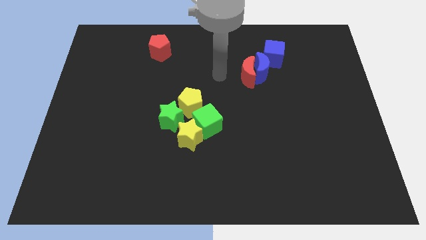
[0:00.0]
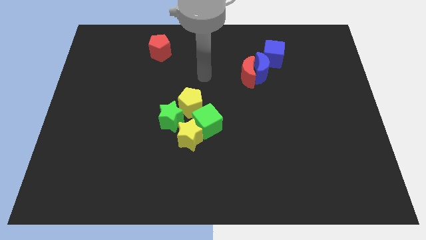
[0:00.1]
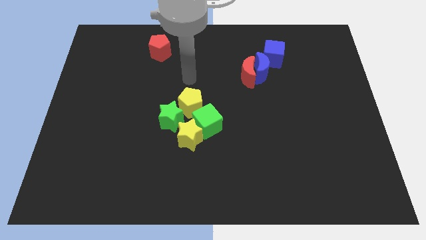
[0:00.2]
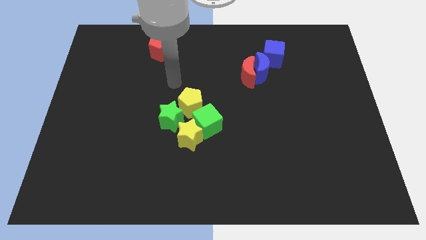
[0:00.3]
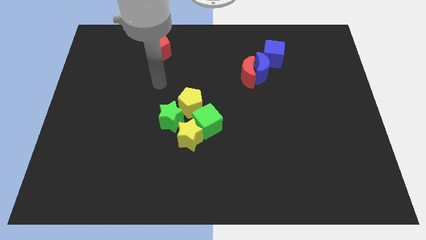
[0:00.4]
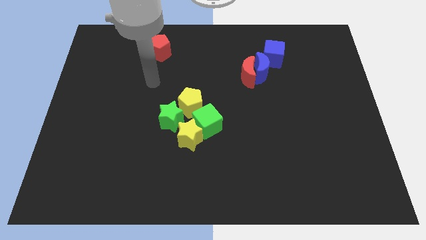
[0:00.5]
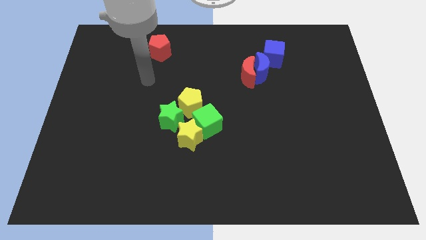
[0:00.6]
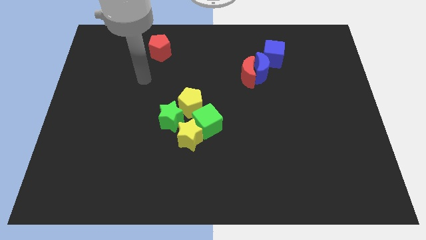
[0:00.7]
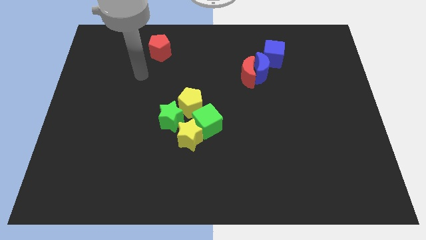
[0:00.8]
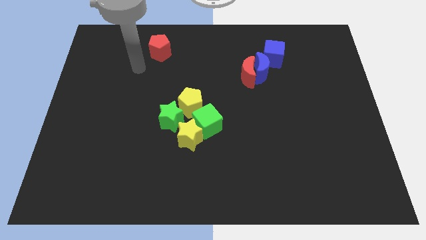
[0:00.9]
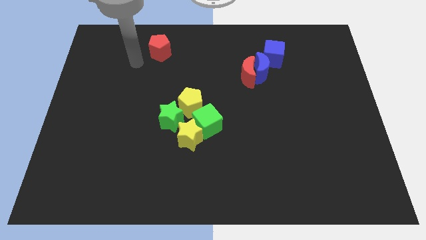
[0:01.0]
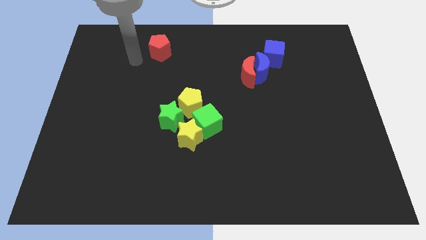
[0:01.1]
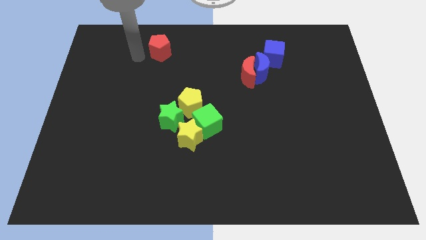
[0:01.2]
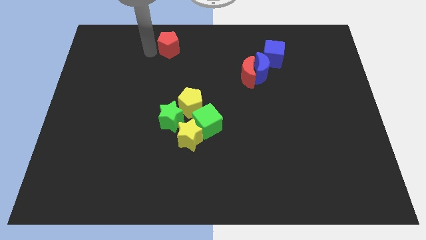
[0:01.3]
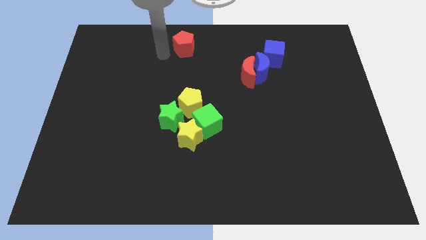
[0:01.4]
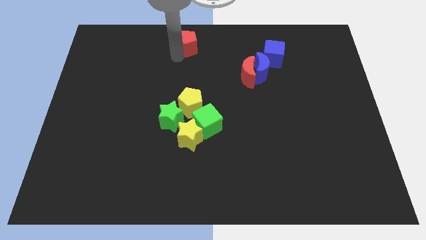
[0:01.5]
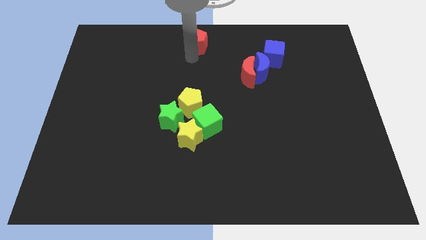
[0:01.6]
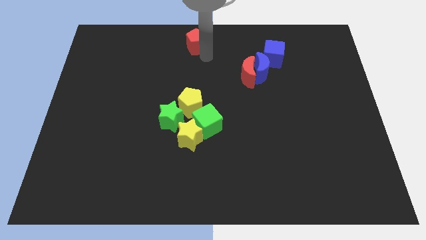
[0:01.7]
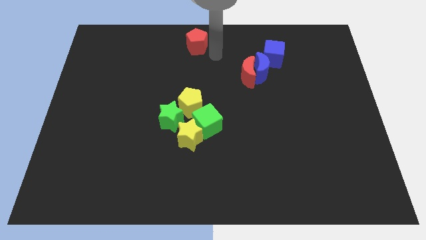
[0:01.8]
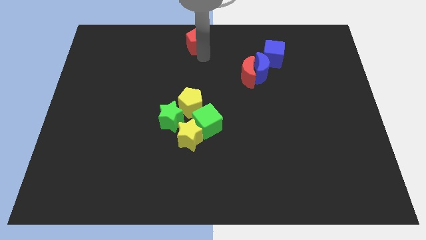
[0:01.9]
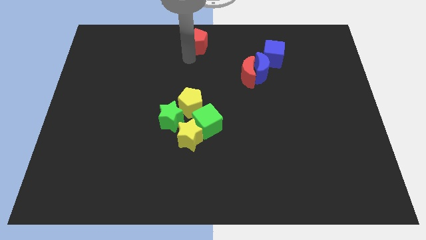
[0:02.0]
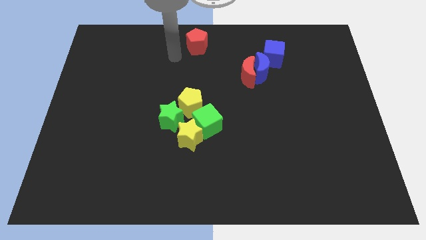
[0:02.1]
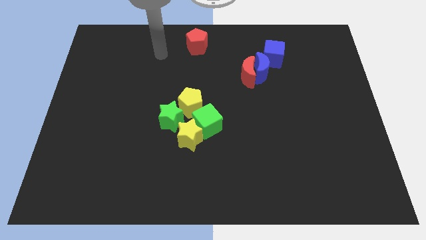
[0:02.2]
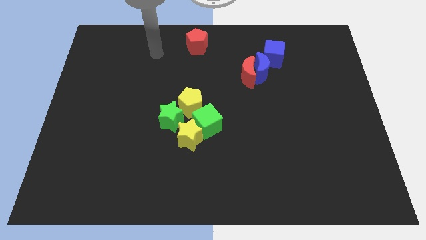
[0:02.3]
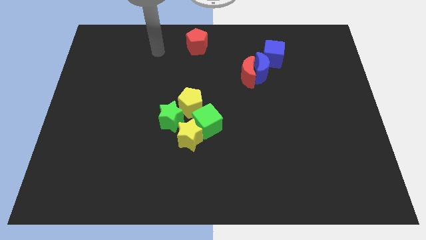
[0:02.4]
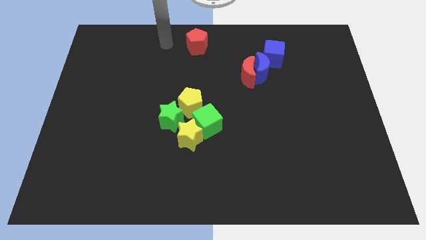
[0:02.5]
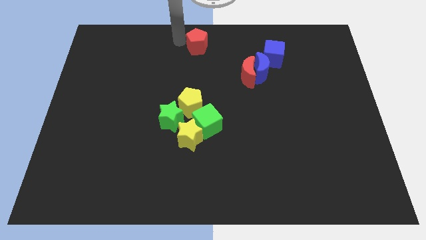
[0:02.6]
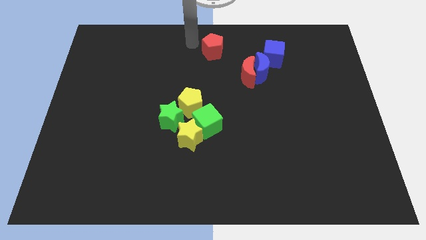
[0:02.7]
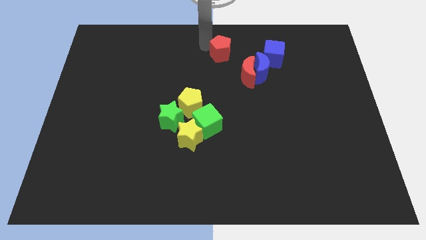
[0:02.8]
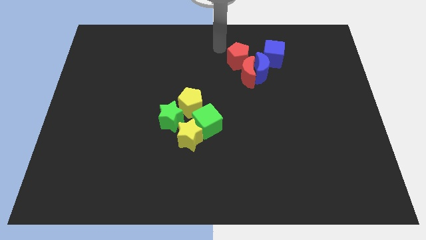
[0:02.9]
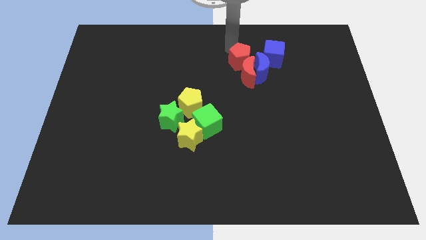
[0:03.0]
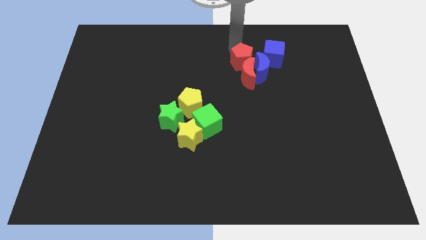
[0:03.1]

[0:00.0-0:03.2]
place red pentagon to the top of red crescent

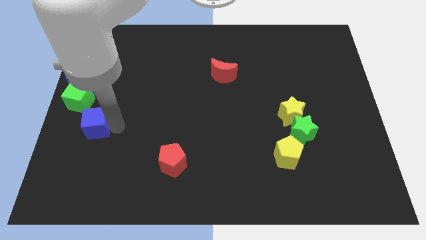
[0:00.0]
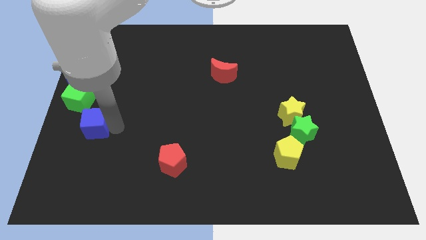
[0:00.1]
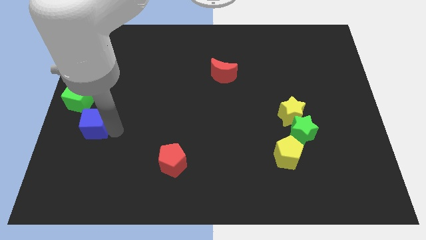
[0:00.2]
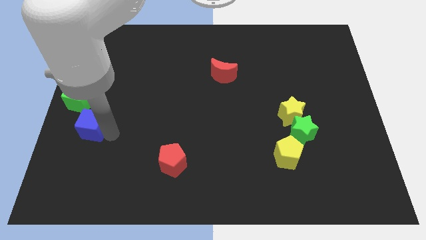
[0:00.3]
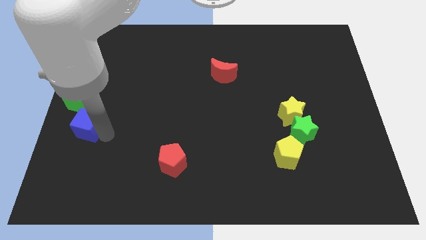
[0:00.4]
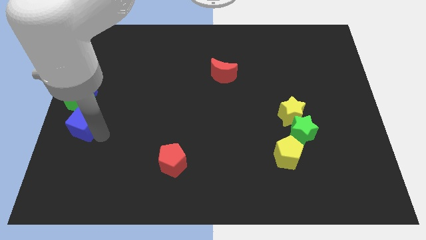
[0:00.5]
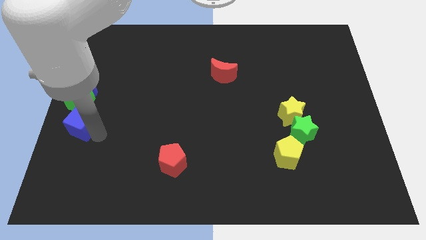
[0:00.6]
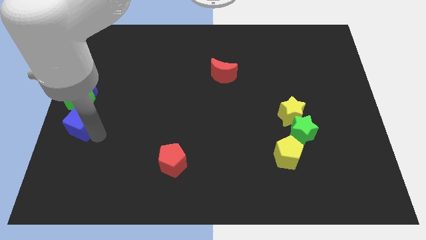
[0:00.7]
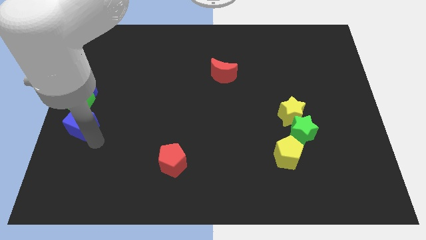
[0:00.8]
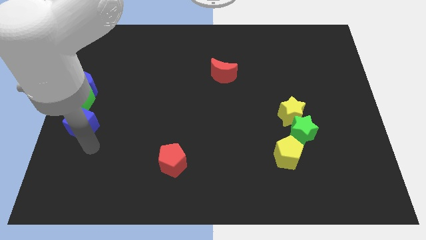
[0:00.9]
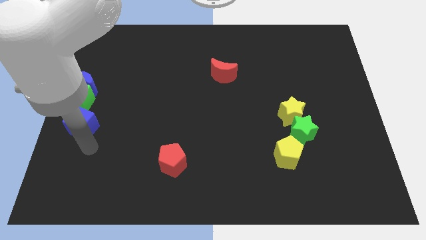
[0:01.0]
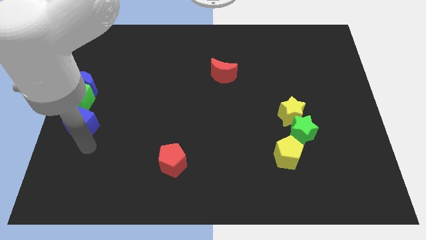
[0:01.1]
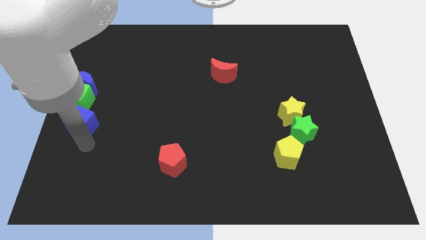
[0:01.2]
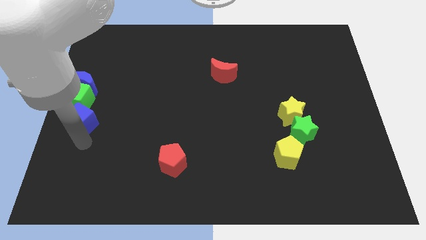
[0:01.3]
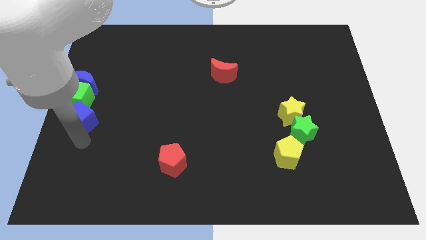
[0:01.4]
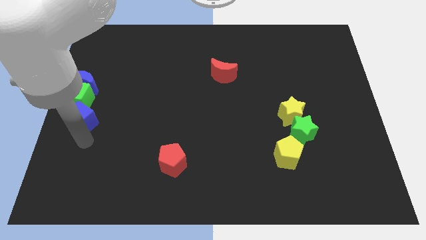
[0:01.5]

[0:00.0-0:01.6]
push the blue cube into the green cube and blue moon

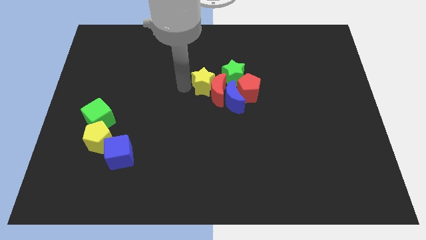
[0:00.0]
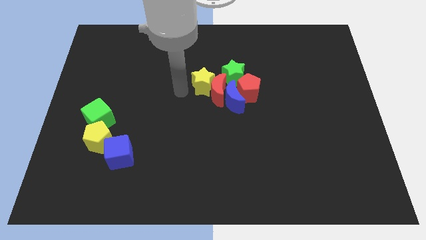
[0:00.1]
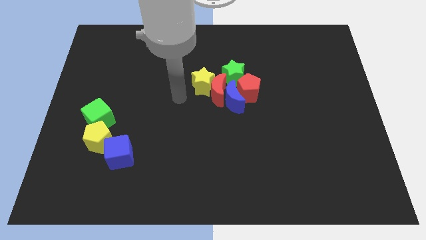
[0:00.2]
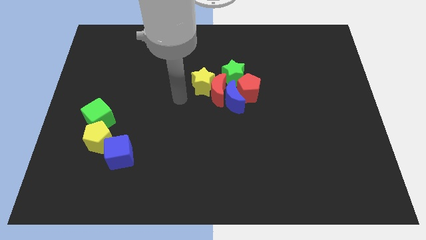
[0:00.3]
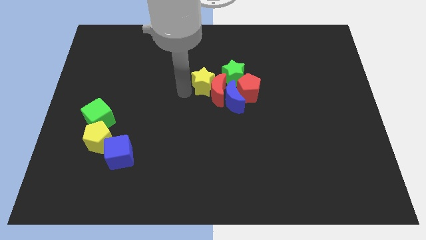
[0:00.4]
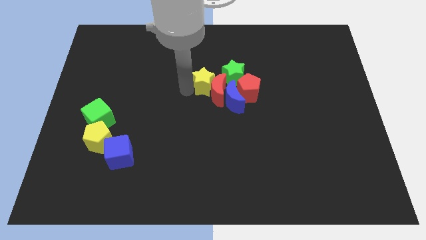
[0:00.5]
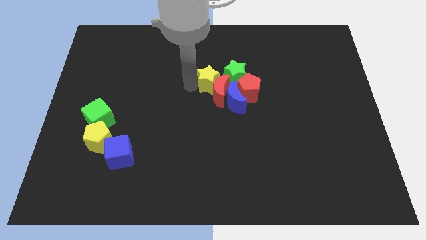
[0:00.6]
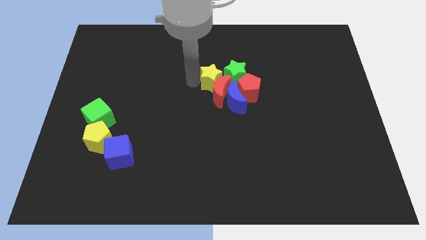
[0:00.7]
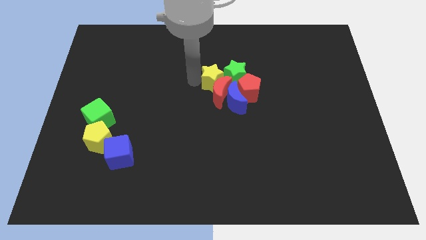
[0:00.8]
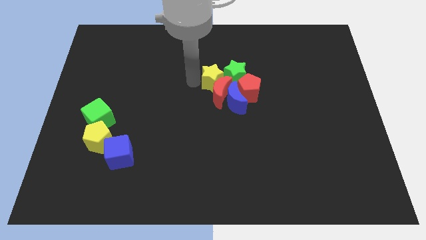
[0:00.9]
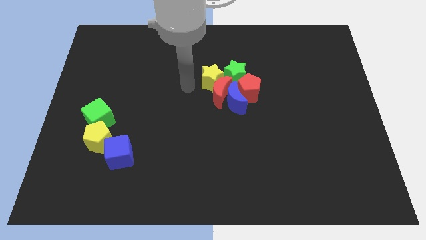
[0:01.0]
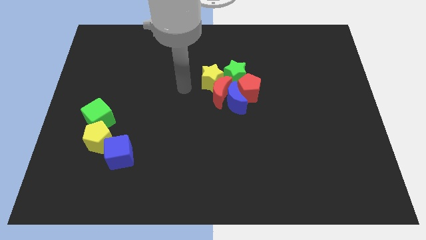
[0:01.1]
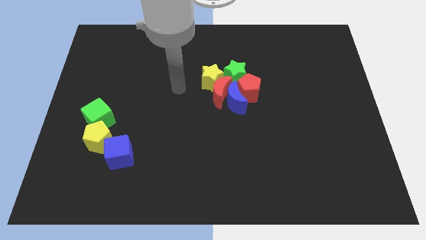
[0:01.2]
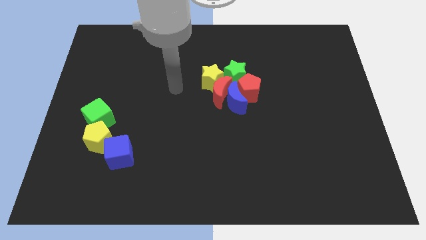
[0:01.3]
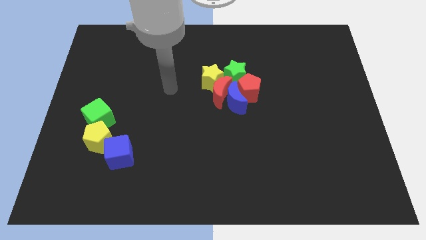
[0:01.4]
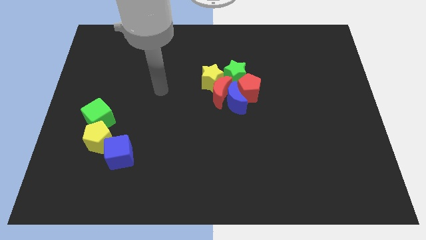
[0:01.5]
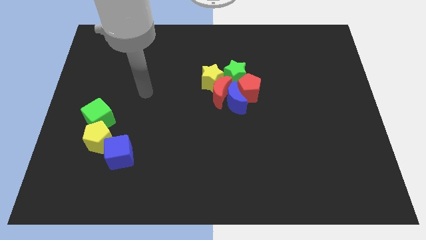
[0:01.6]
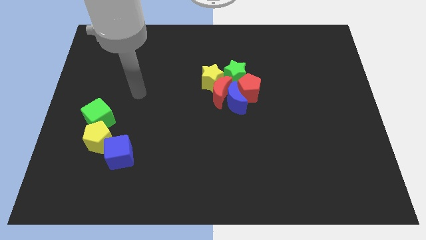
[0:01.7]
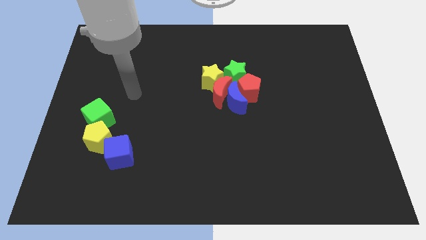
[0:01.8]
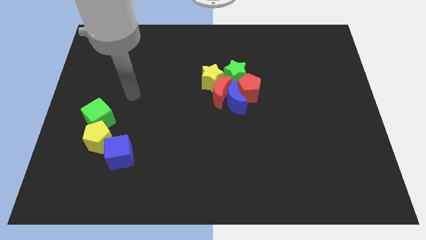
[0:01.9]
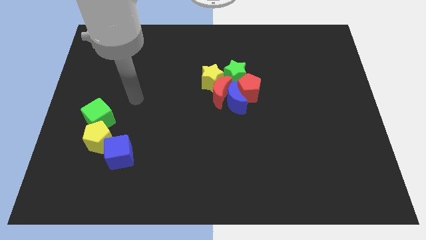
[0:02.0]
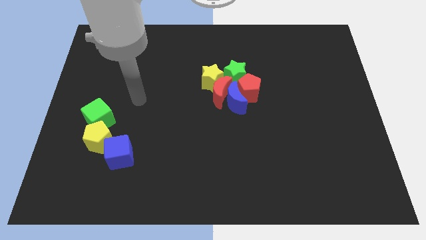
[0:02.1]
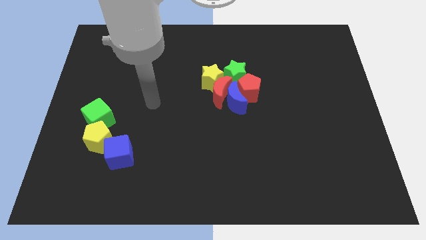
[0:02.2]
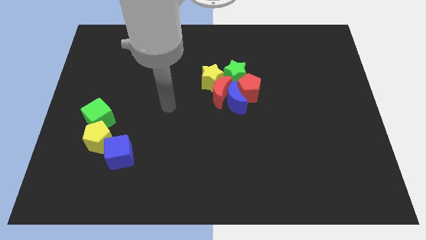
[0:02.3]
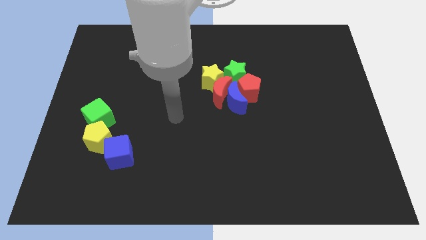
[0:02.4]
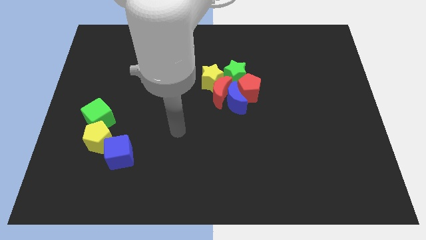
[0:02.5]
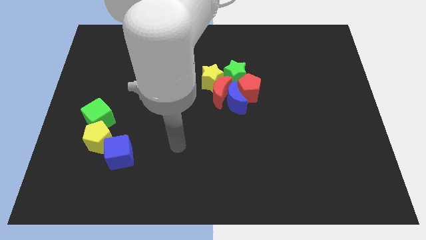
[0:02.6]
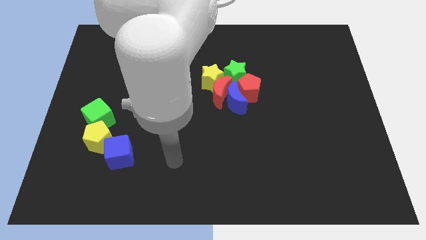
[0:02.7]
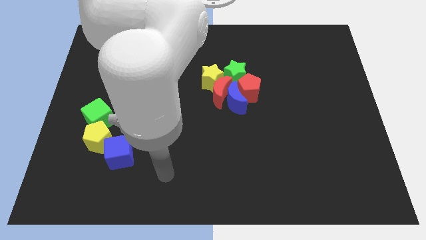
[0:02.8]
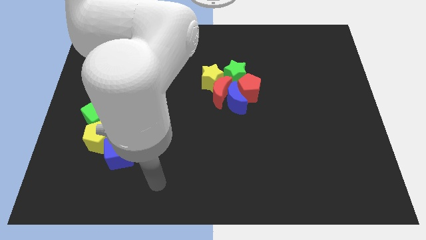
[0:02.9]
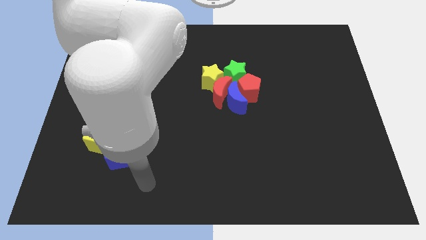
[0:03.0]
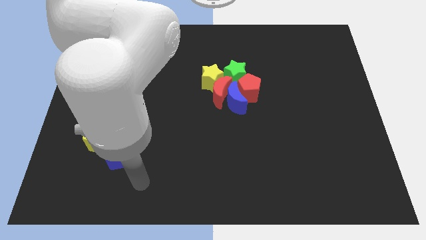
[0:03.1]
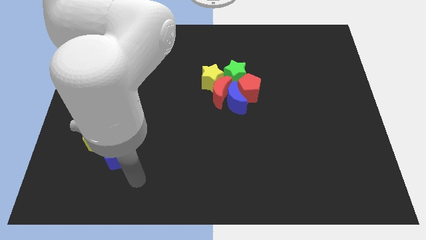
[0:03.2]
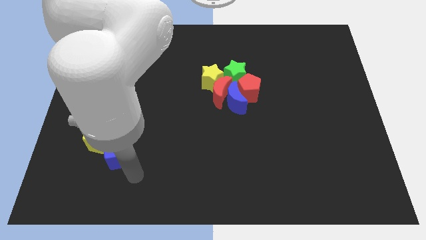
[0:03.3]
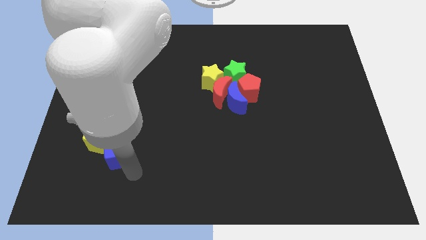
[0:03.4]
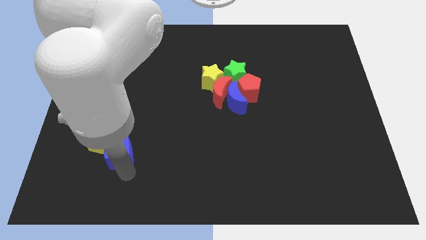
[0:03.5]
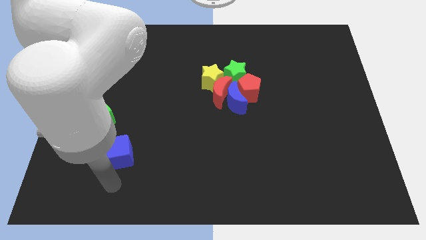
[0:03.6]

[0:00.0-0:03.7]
point the arm to the bottom side the blue cube

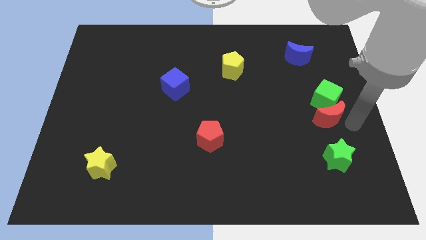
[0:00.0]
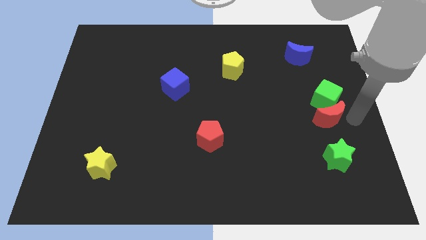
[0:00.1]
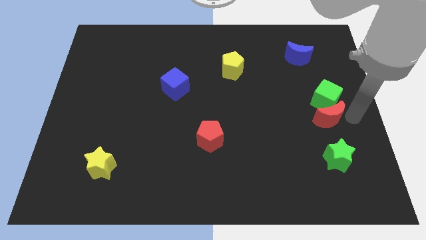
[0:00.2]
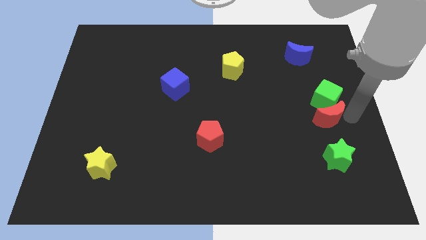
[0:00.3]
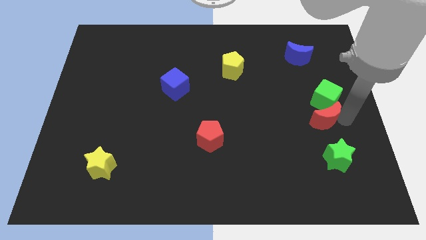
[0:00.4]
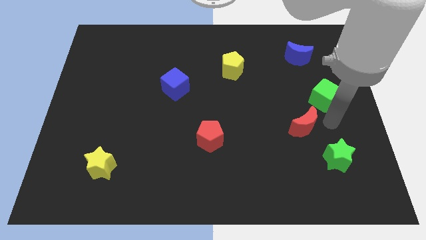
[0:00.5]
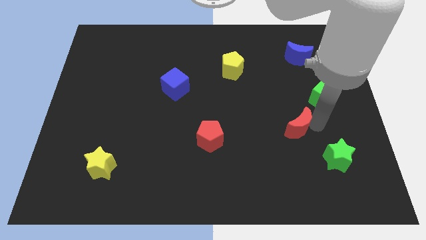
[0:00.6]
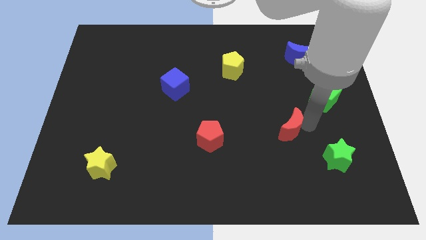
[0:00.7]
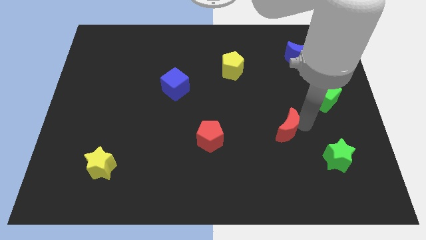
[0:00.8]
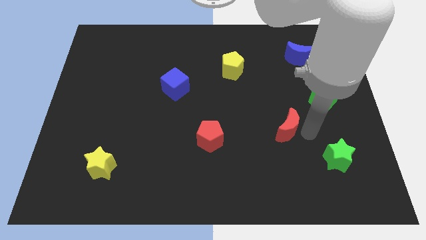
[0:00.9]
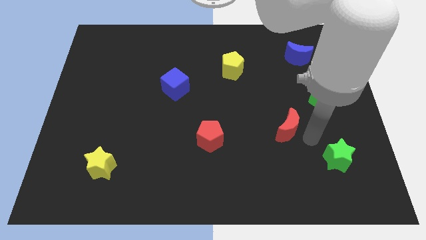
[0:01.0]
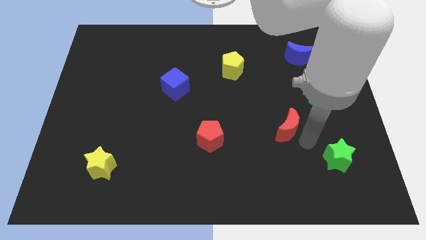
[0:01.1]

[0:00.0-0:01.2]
push the red crescent away from green cube
